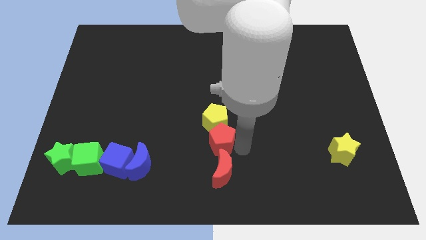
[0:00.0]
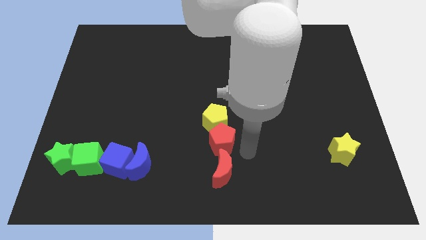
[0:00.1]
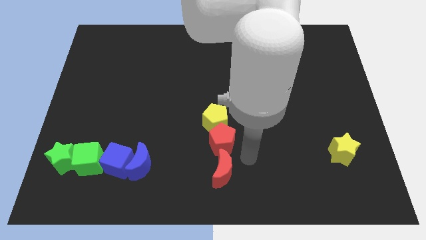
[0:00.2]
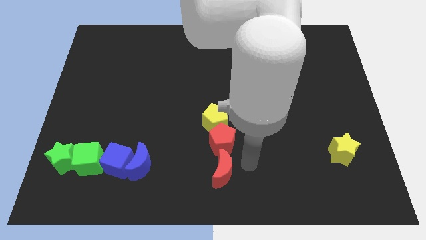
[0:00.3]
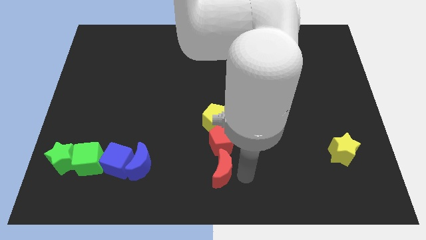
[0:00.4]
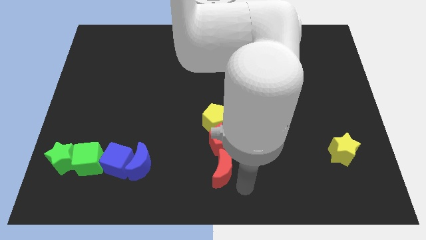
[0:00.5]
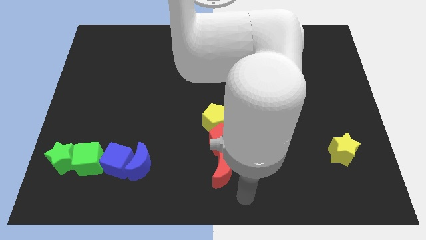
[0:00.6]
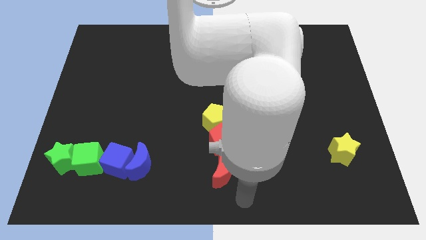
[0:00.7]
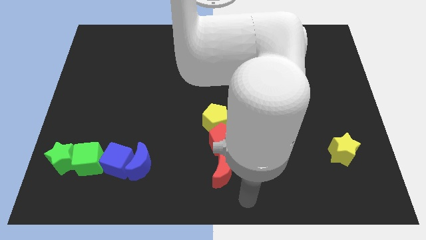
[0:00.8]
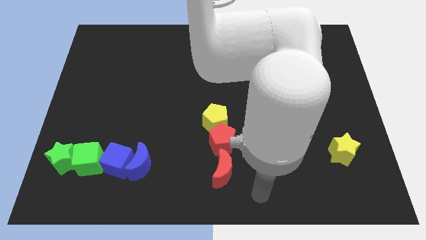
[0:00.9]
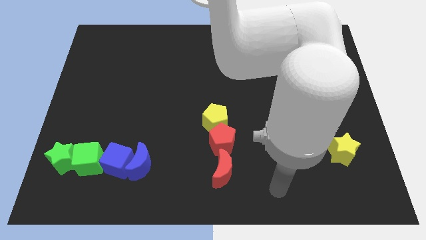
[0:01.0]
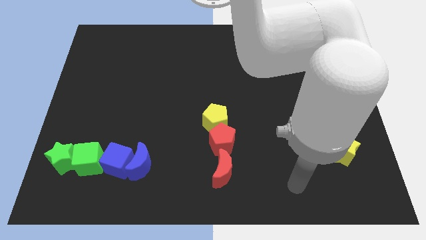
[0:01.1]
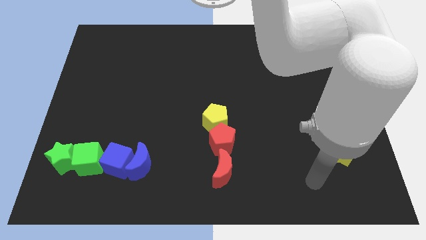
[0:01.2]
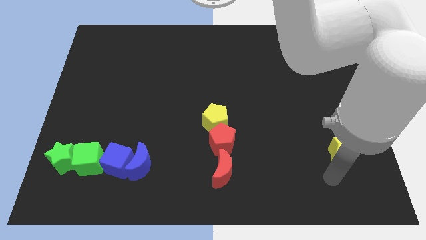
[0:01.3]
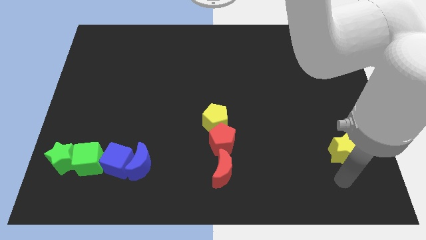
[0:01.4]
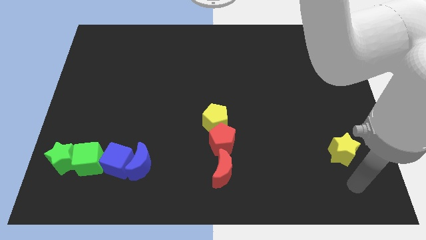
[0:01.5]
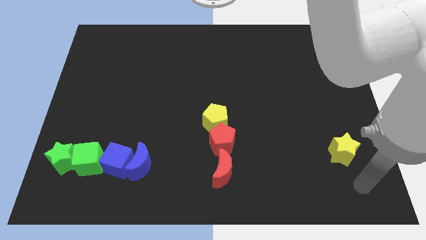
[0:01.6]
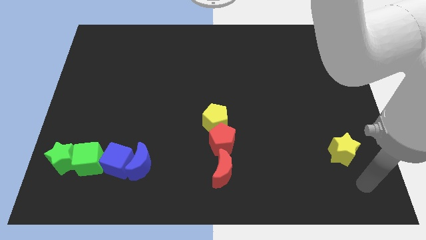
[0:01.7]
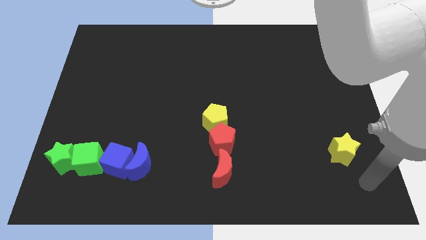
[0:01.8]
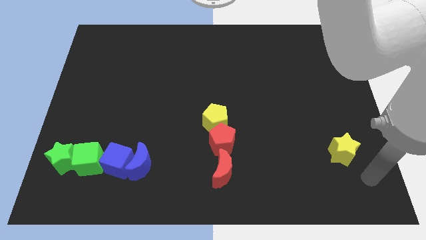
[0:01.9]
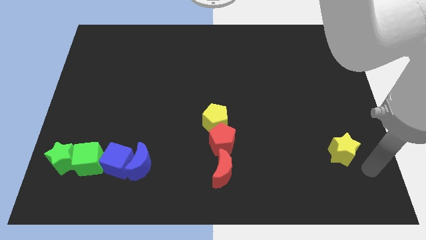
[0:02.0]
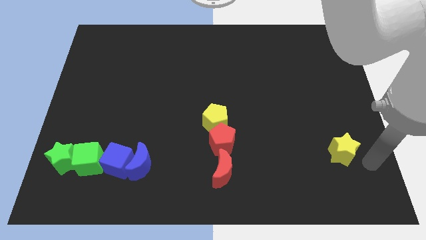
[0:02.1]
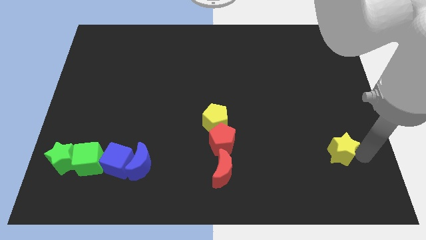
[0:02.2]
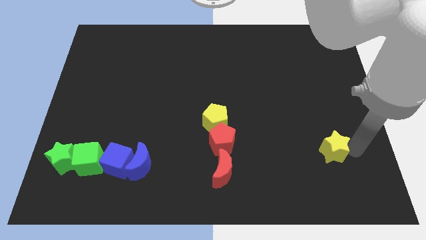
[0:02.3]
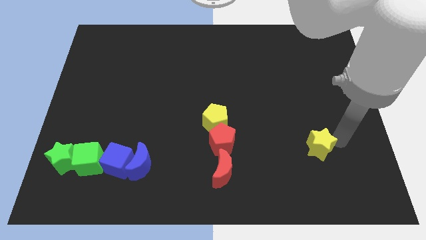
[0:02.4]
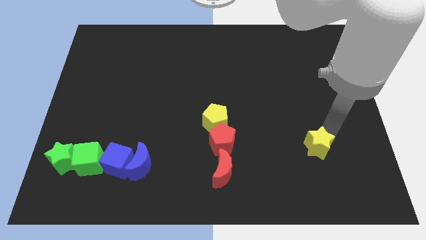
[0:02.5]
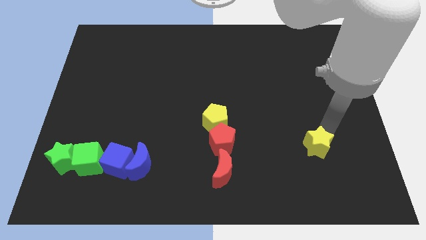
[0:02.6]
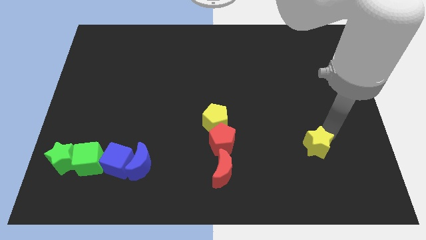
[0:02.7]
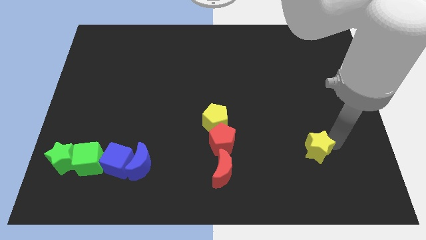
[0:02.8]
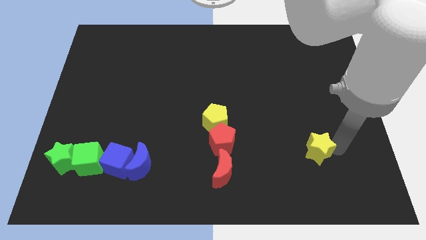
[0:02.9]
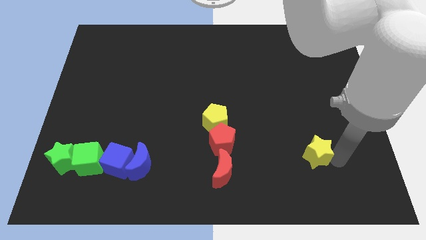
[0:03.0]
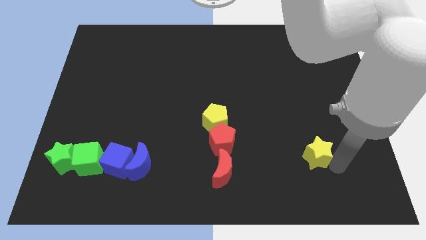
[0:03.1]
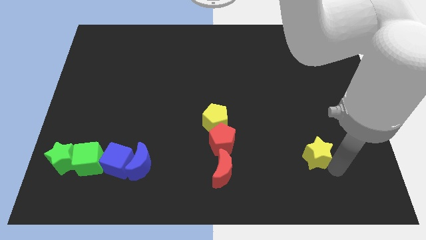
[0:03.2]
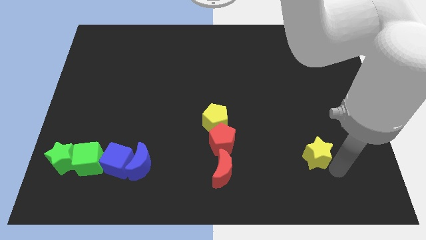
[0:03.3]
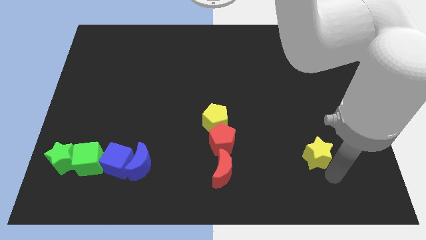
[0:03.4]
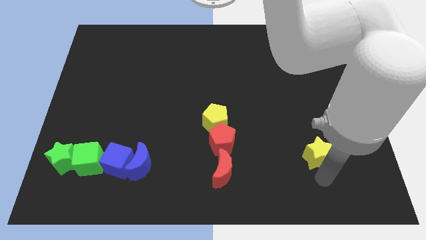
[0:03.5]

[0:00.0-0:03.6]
slightly move yellow star towards the center

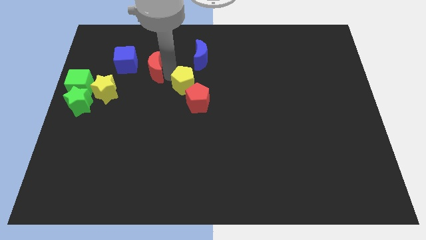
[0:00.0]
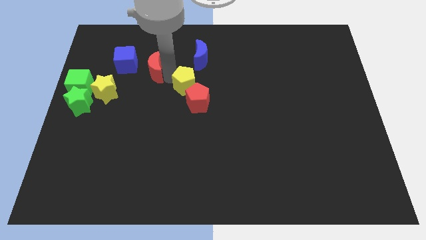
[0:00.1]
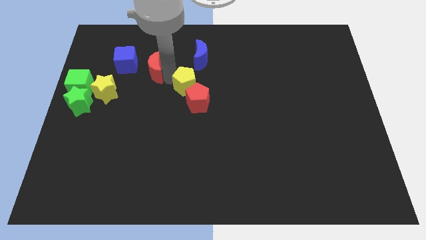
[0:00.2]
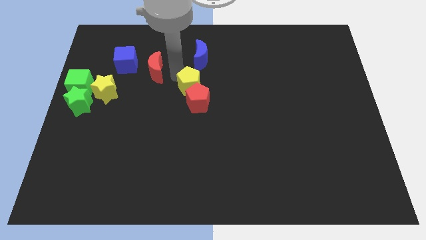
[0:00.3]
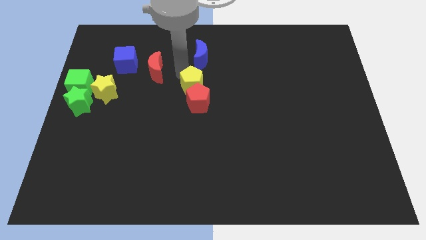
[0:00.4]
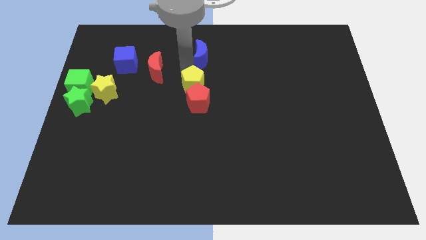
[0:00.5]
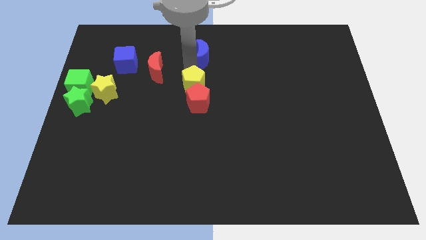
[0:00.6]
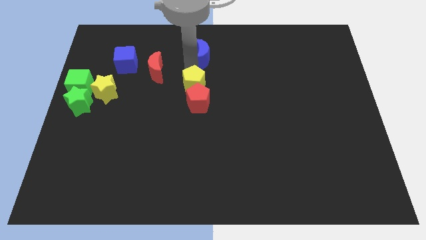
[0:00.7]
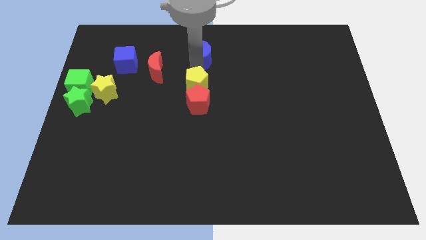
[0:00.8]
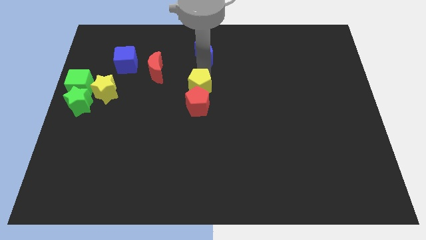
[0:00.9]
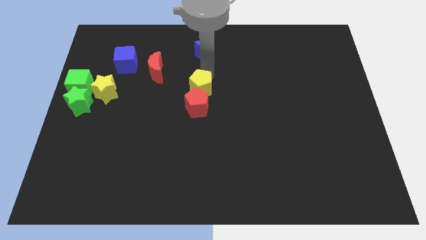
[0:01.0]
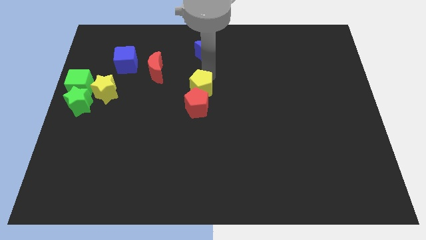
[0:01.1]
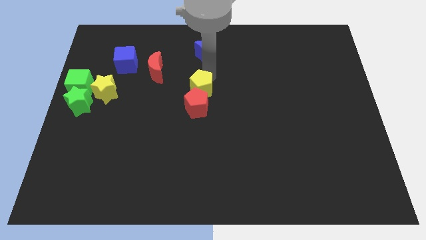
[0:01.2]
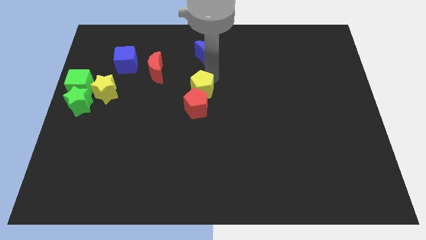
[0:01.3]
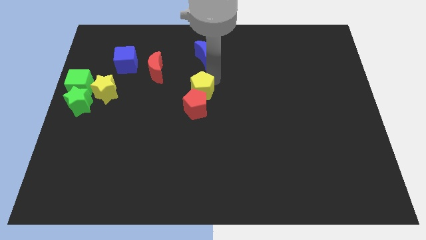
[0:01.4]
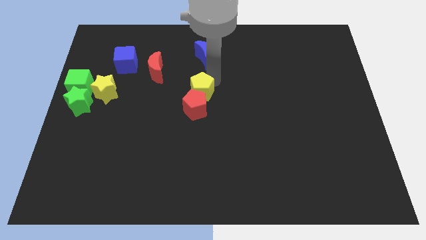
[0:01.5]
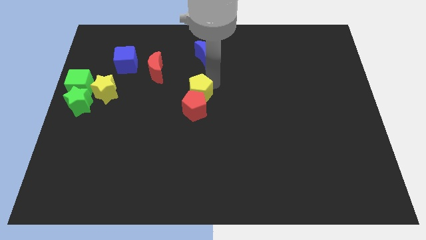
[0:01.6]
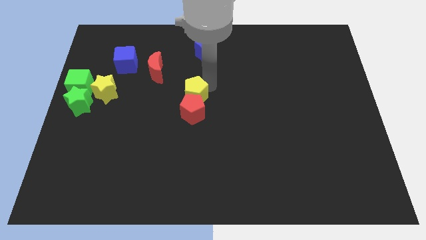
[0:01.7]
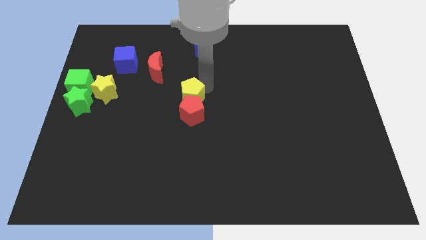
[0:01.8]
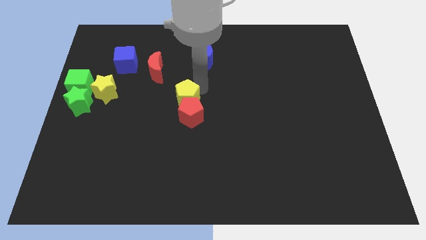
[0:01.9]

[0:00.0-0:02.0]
push the yellow pentagon into the red pentagon

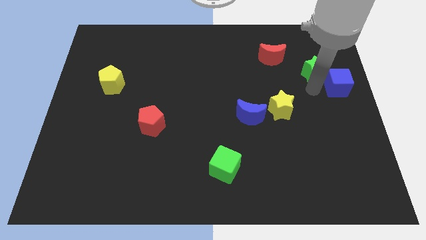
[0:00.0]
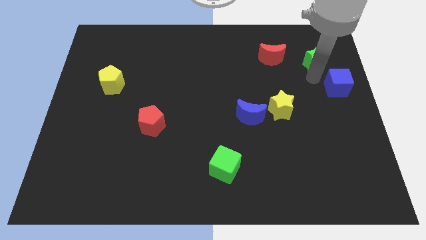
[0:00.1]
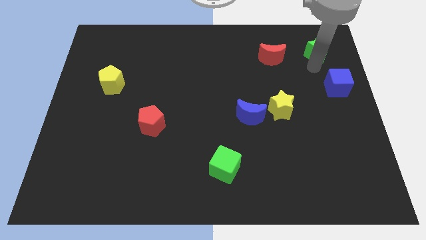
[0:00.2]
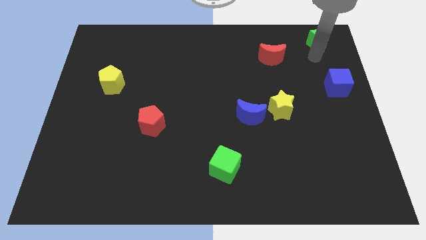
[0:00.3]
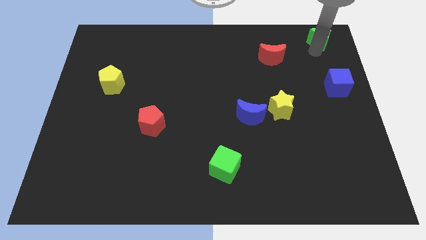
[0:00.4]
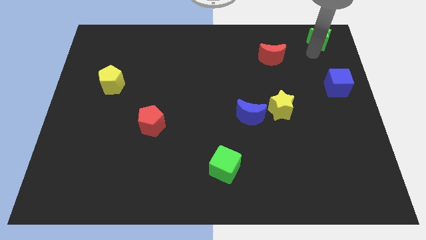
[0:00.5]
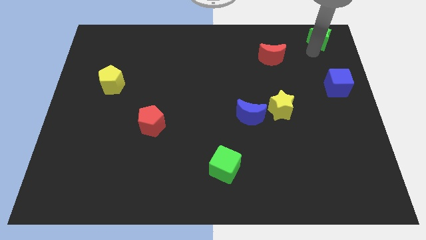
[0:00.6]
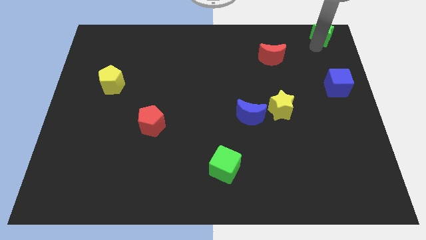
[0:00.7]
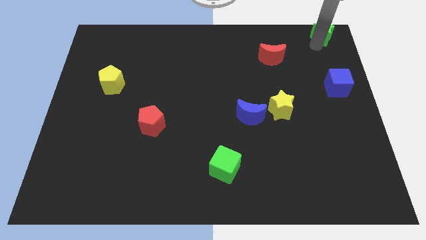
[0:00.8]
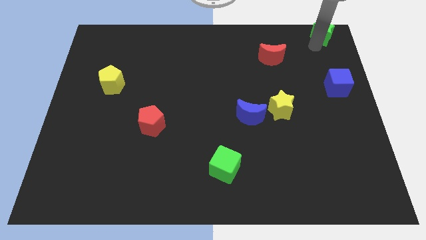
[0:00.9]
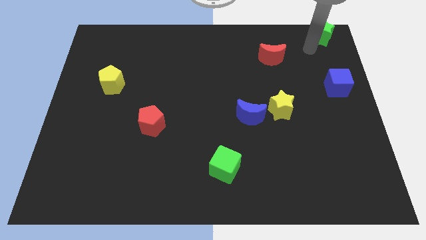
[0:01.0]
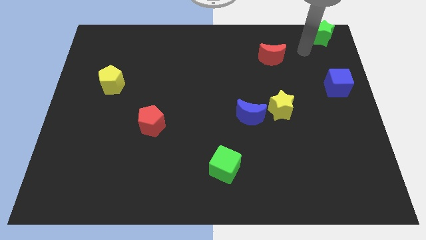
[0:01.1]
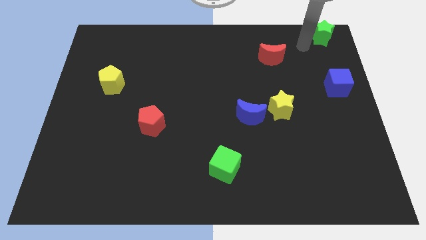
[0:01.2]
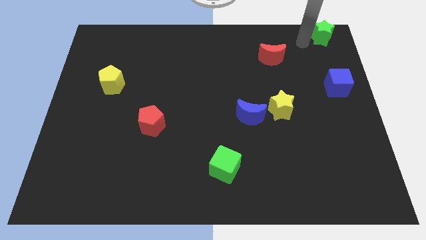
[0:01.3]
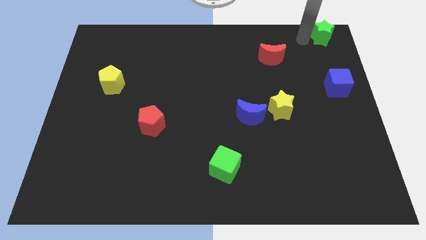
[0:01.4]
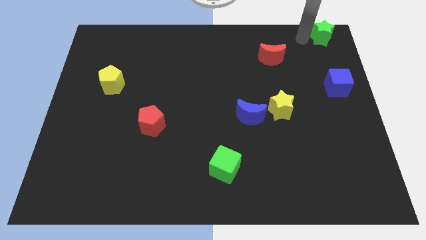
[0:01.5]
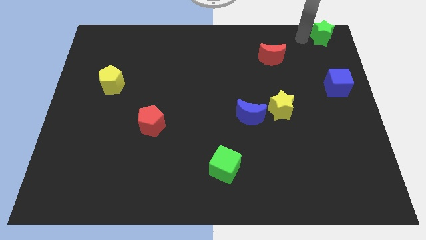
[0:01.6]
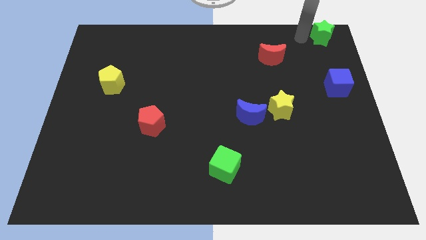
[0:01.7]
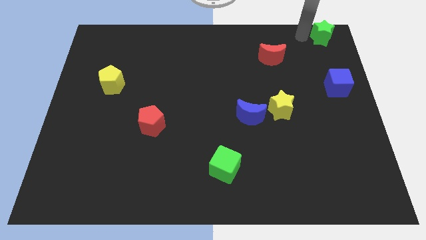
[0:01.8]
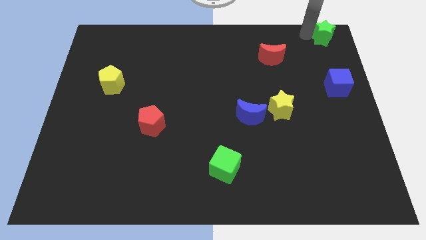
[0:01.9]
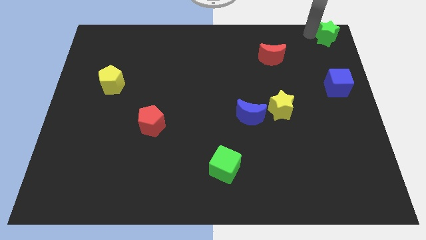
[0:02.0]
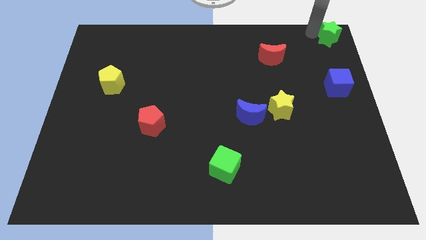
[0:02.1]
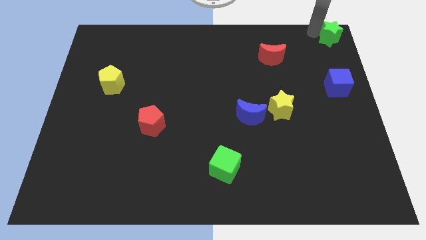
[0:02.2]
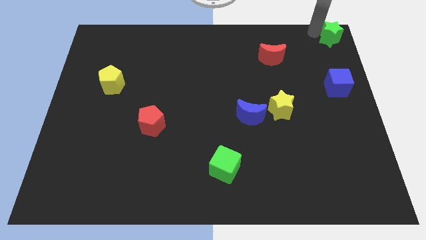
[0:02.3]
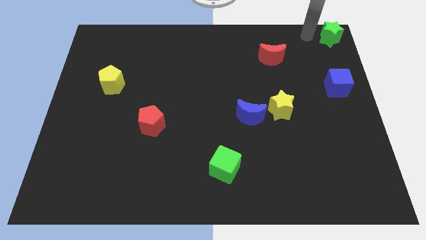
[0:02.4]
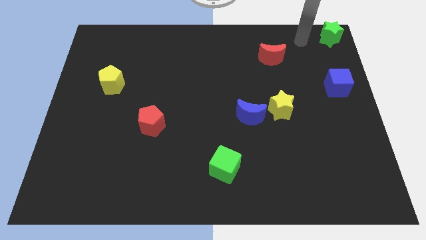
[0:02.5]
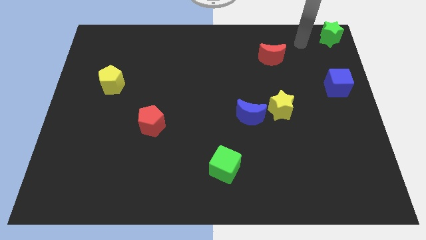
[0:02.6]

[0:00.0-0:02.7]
push the green star to the top right corner of the board

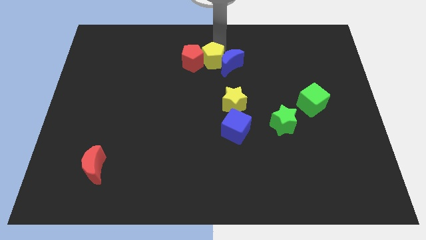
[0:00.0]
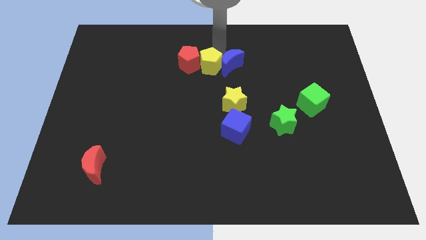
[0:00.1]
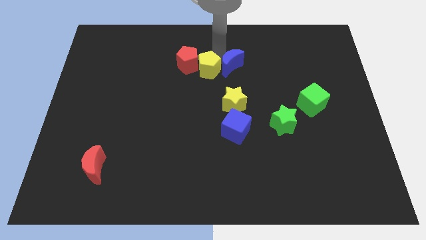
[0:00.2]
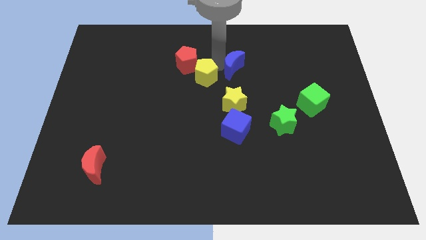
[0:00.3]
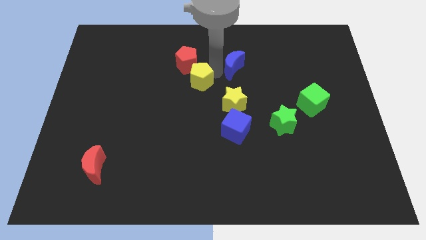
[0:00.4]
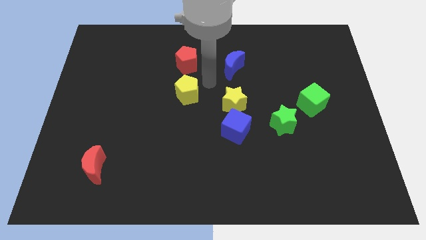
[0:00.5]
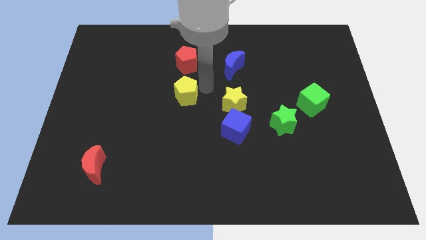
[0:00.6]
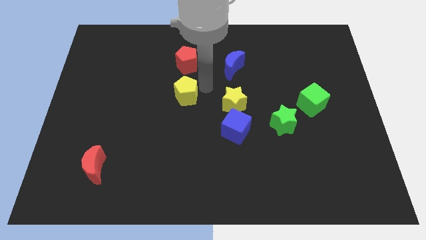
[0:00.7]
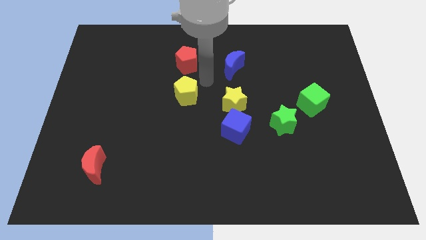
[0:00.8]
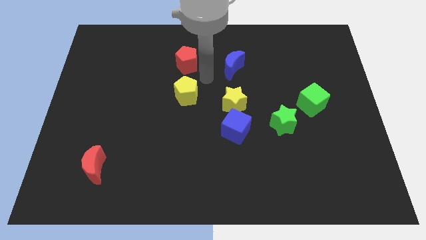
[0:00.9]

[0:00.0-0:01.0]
place the yellow pentagon to the center
